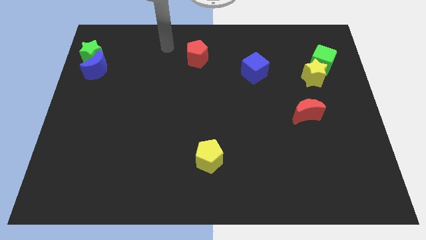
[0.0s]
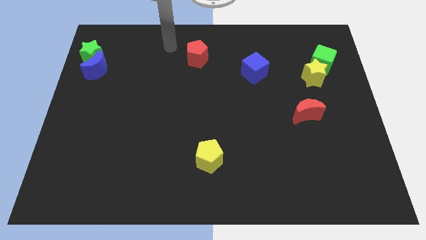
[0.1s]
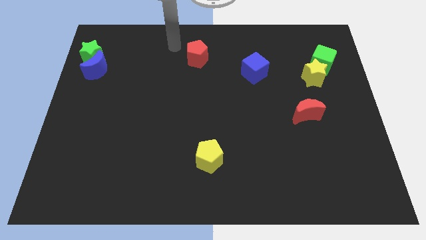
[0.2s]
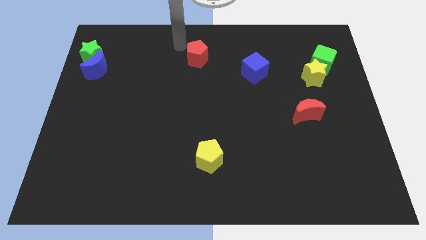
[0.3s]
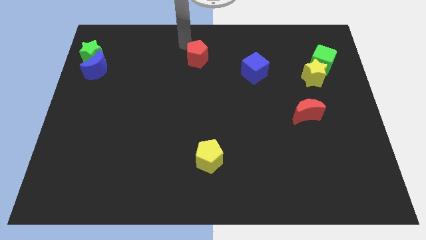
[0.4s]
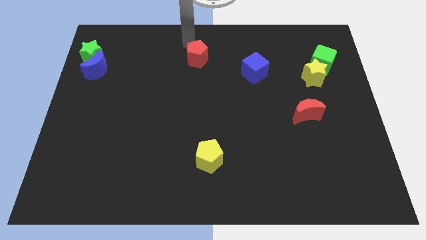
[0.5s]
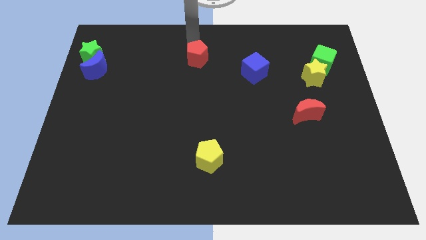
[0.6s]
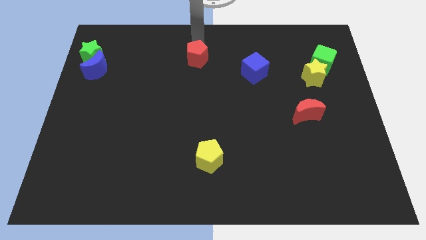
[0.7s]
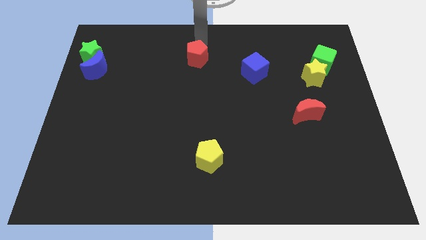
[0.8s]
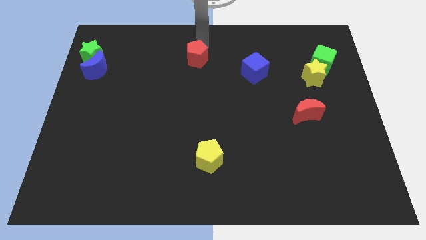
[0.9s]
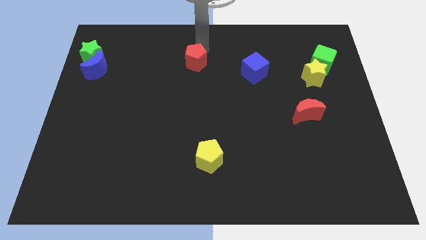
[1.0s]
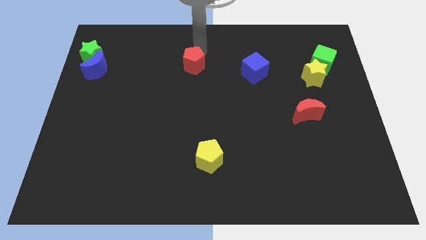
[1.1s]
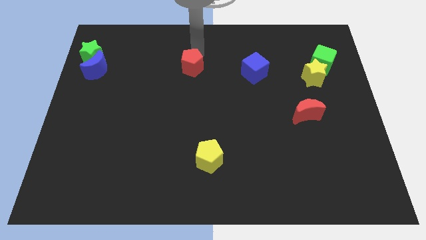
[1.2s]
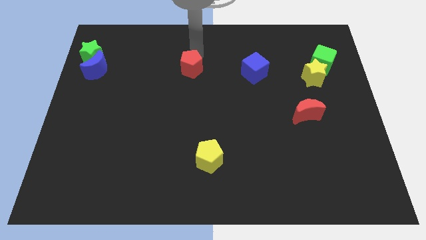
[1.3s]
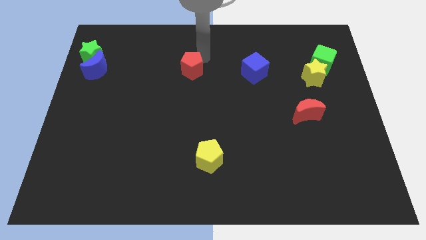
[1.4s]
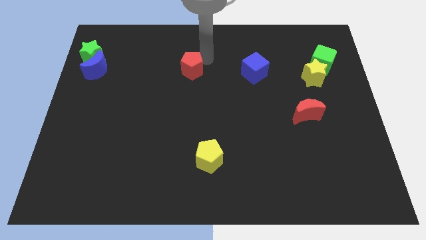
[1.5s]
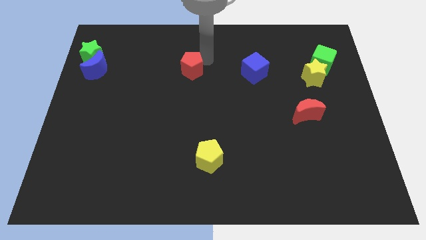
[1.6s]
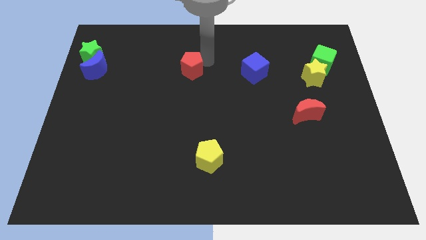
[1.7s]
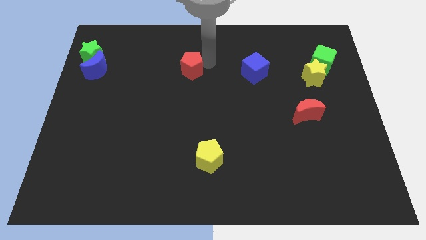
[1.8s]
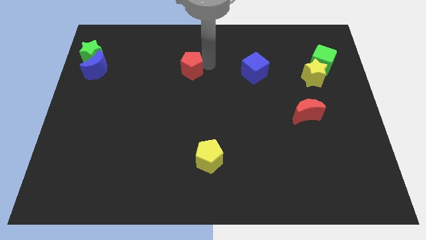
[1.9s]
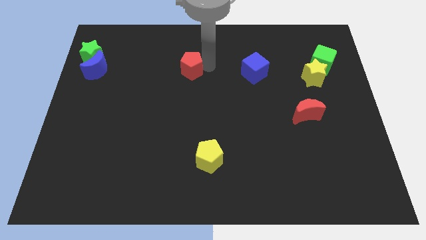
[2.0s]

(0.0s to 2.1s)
push the red pentagon slightly to the bottom

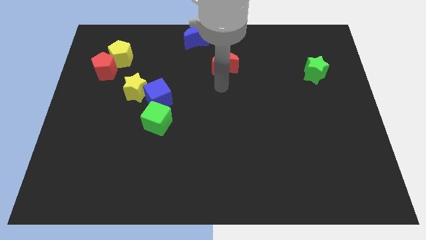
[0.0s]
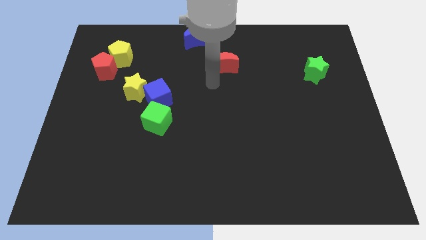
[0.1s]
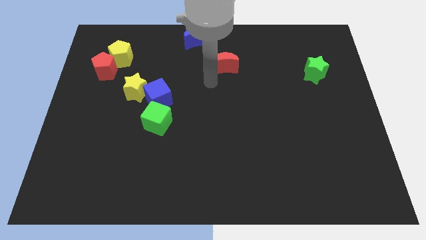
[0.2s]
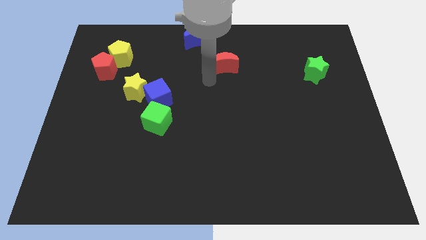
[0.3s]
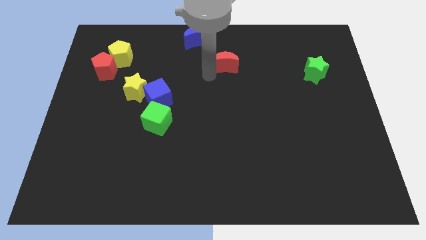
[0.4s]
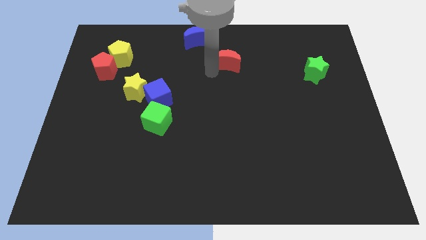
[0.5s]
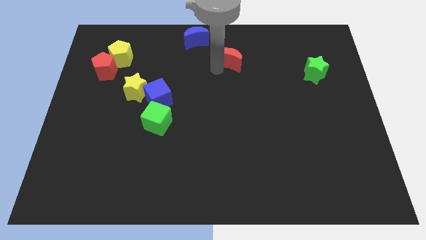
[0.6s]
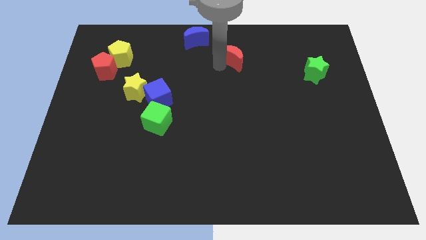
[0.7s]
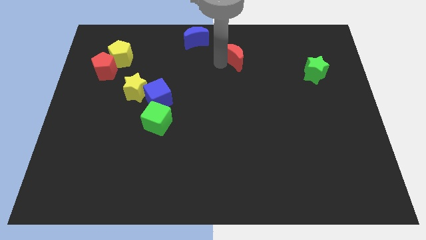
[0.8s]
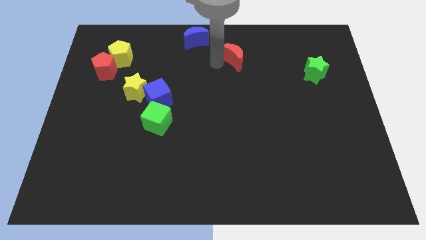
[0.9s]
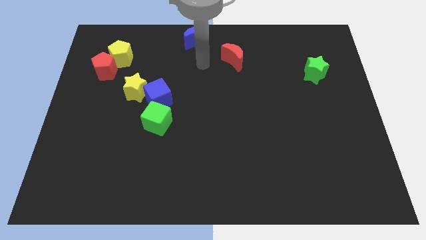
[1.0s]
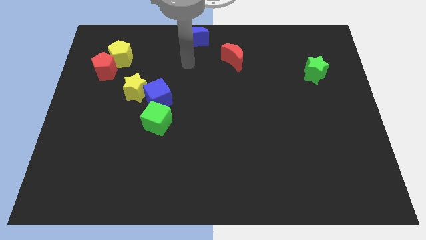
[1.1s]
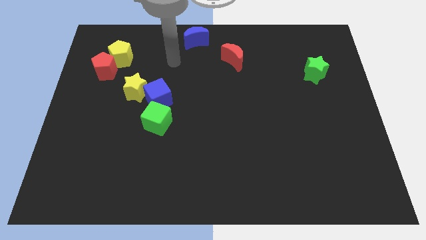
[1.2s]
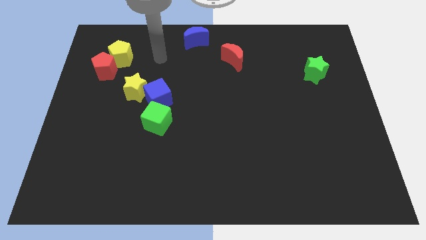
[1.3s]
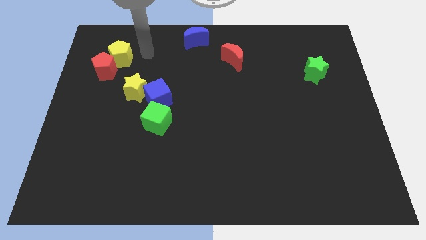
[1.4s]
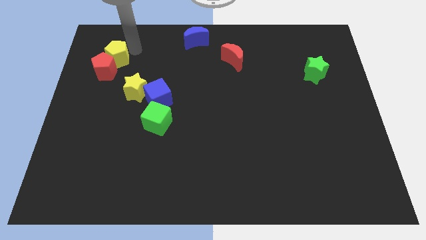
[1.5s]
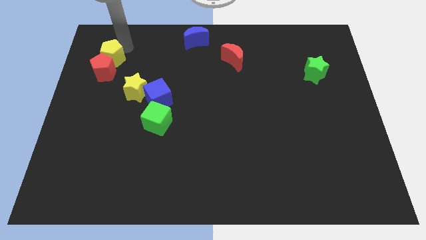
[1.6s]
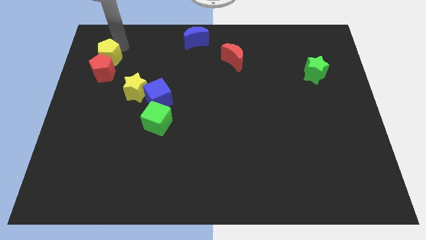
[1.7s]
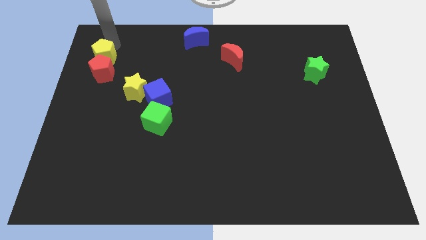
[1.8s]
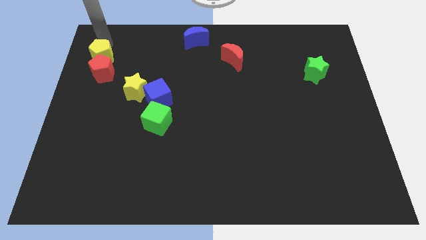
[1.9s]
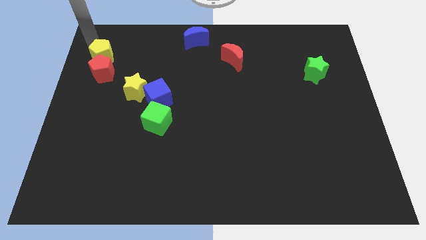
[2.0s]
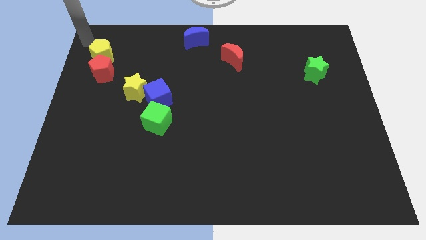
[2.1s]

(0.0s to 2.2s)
move the arm at the top left of the yellow pentagon

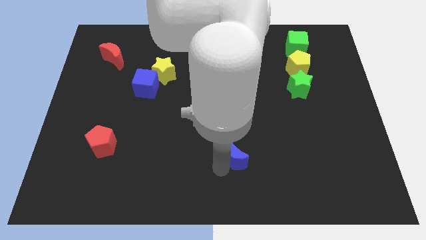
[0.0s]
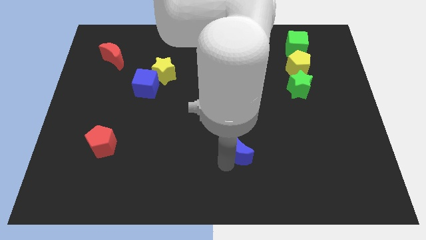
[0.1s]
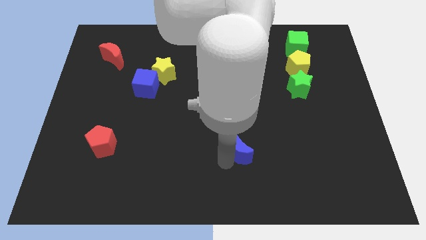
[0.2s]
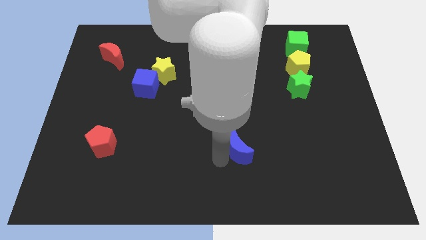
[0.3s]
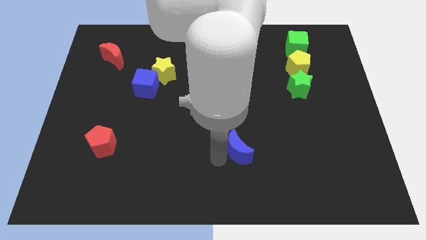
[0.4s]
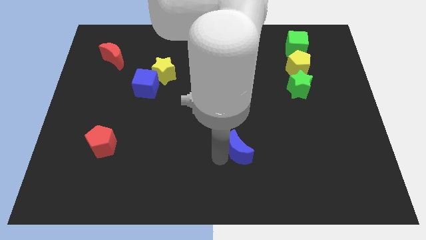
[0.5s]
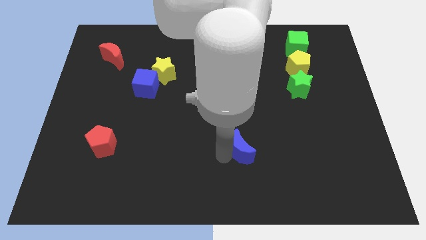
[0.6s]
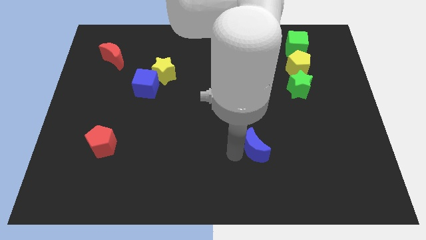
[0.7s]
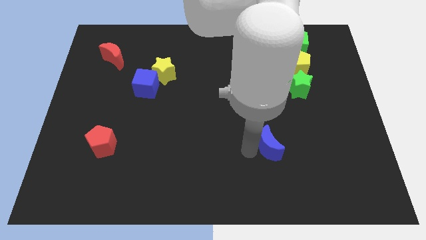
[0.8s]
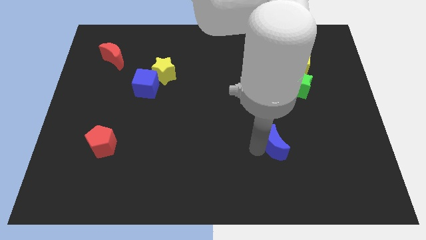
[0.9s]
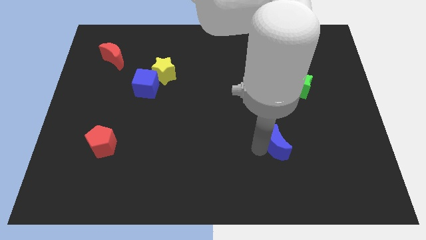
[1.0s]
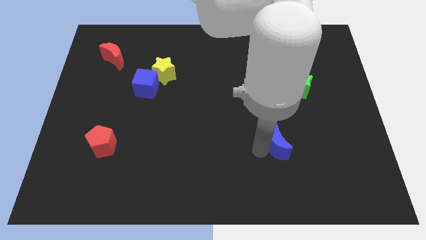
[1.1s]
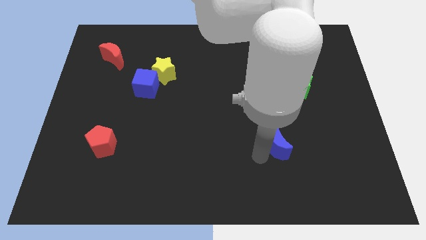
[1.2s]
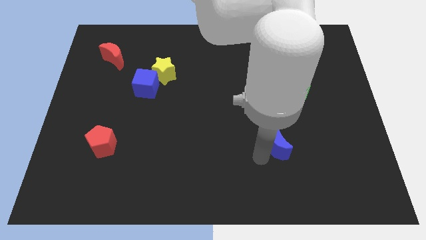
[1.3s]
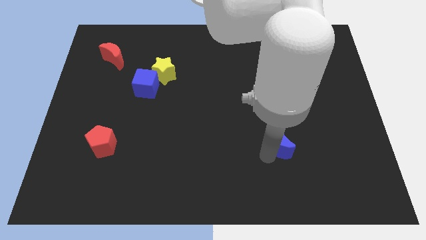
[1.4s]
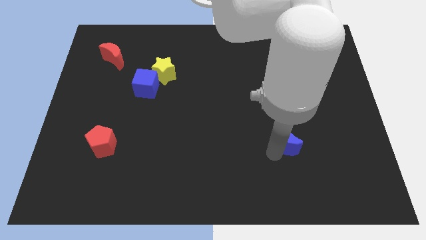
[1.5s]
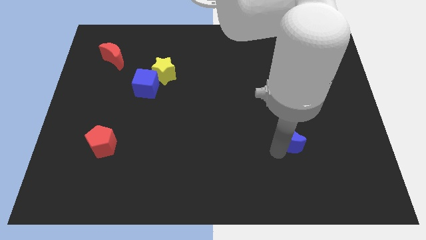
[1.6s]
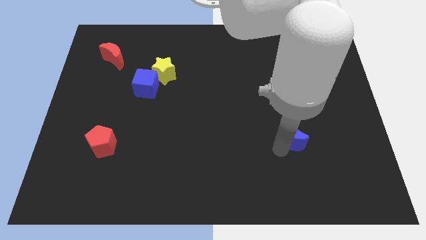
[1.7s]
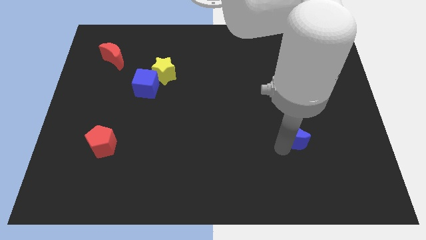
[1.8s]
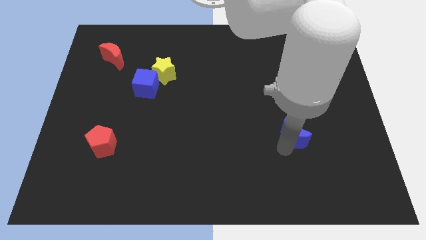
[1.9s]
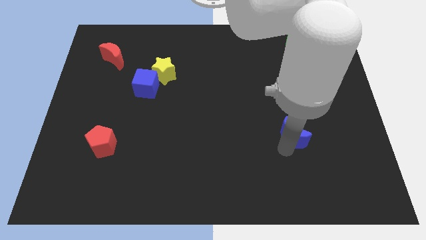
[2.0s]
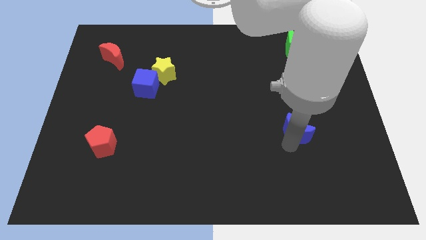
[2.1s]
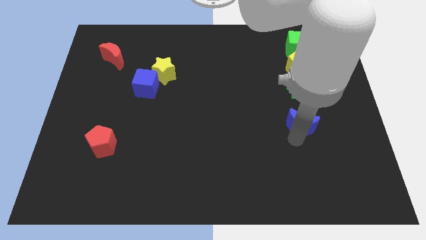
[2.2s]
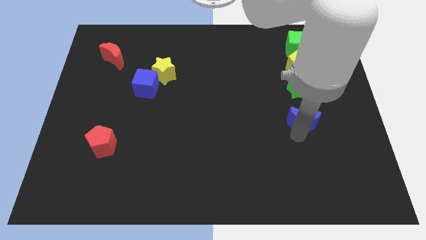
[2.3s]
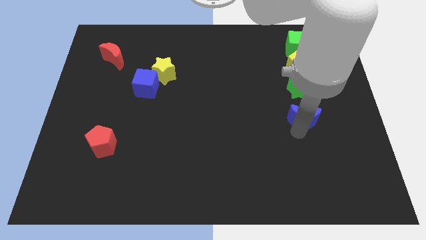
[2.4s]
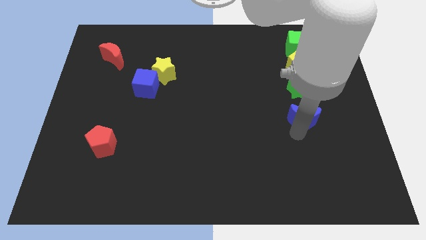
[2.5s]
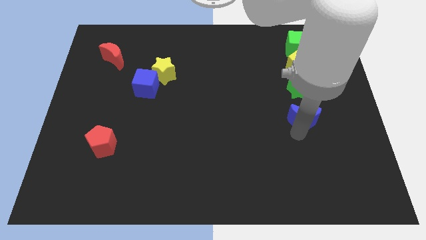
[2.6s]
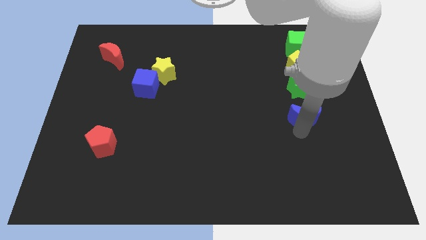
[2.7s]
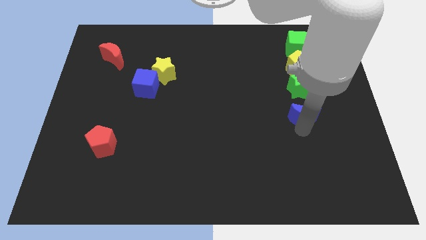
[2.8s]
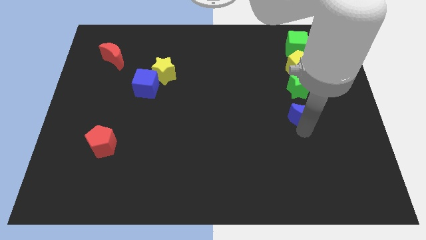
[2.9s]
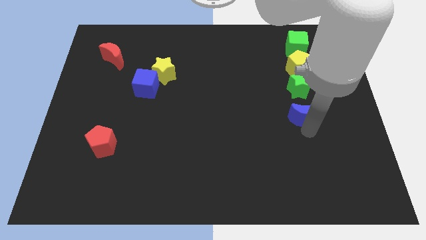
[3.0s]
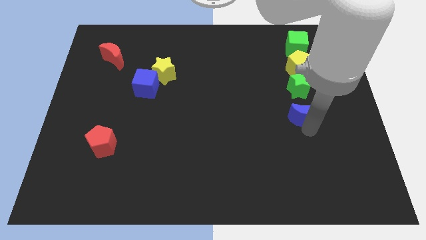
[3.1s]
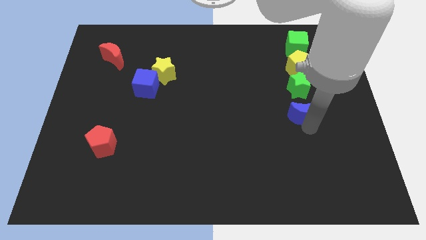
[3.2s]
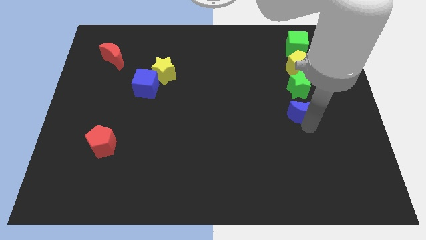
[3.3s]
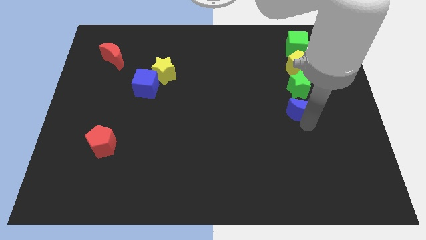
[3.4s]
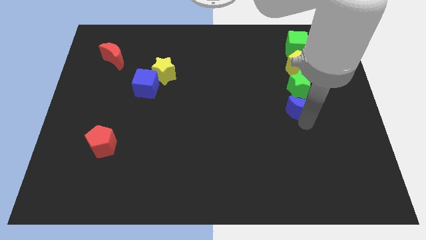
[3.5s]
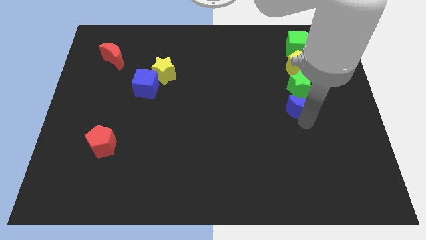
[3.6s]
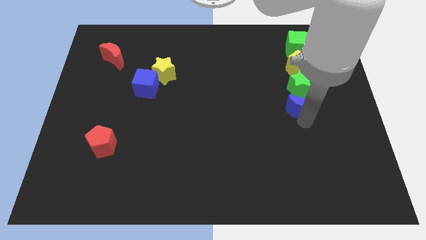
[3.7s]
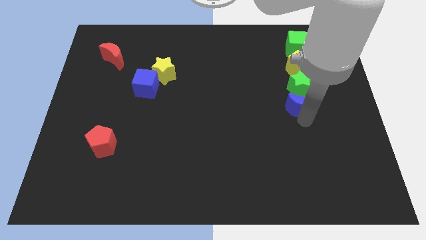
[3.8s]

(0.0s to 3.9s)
place the blue crescent under the green star

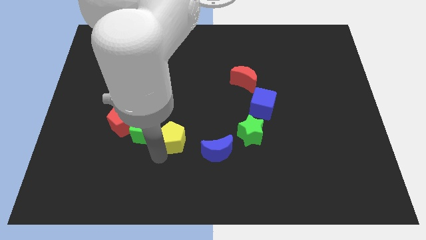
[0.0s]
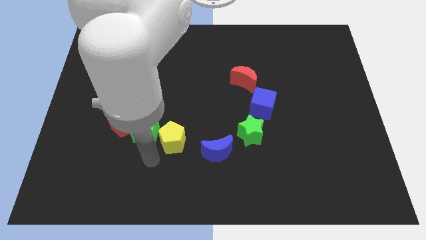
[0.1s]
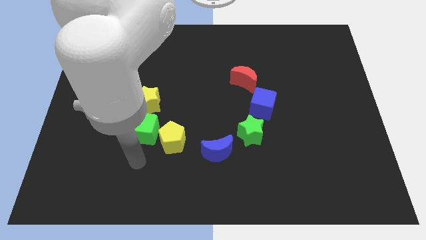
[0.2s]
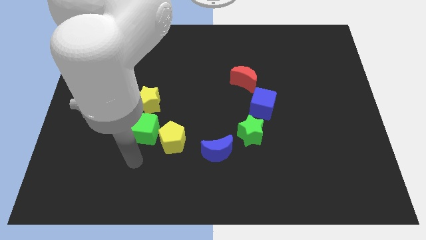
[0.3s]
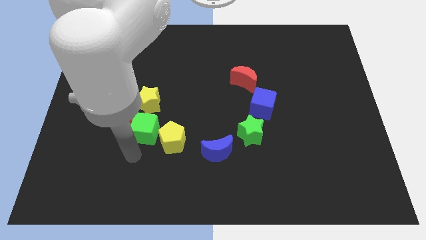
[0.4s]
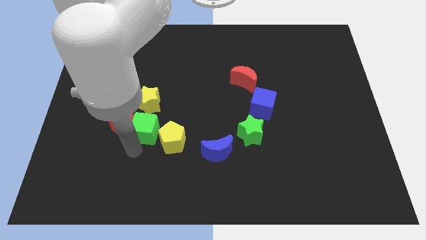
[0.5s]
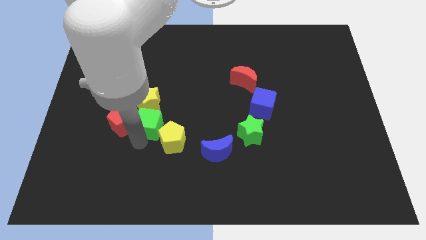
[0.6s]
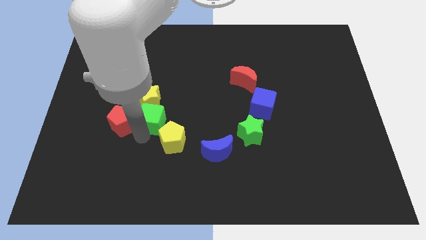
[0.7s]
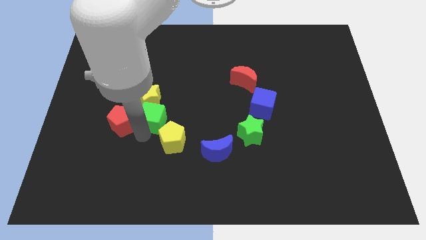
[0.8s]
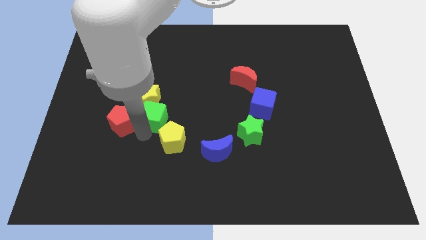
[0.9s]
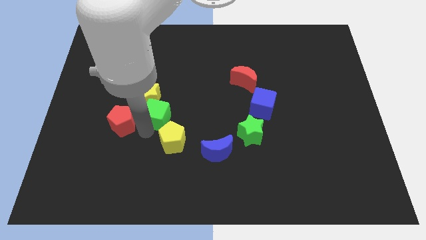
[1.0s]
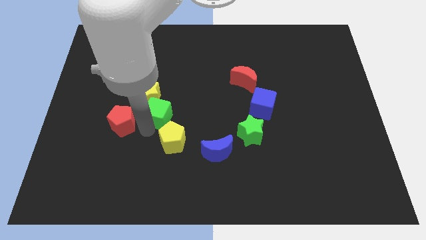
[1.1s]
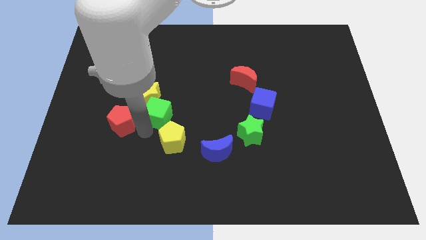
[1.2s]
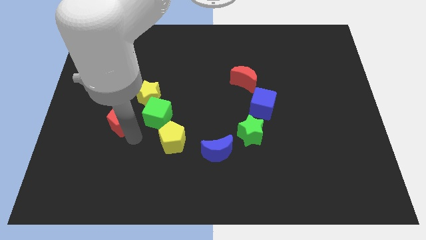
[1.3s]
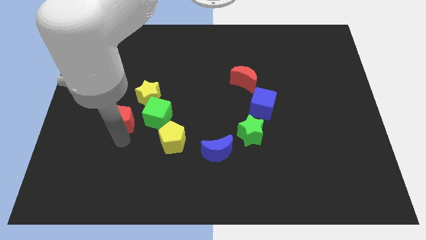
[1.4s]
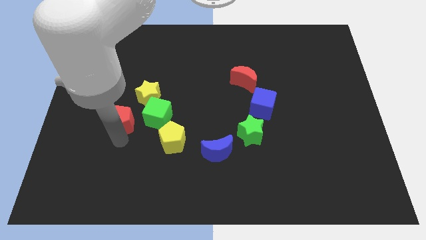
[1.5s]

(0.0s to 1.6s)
place green cube to the top of yellow pentagon
